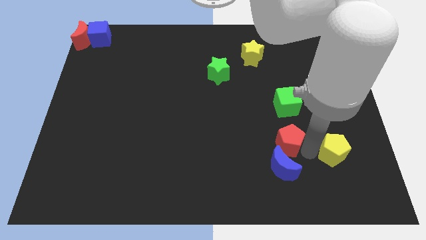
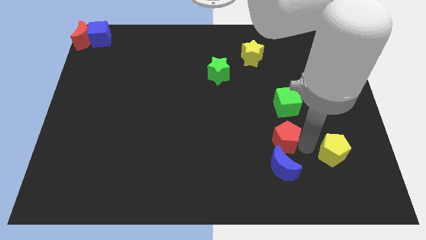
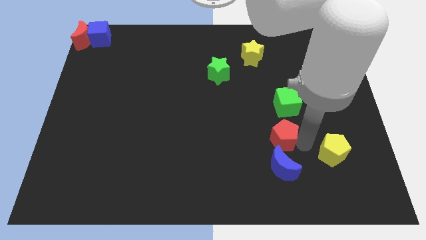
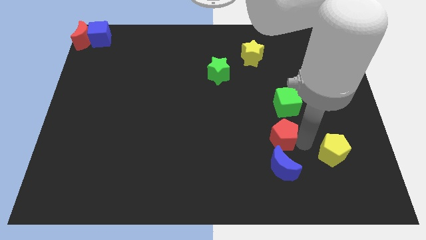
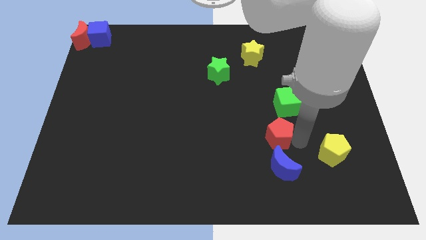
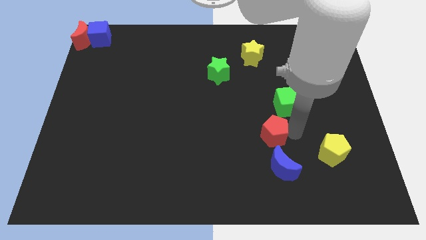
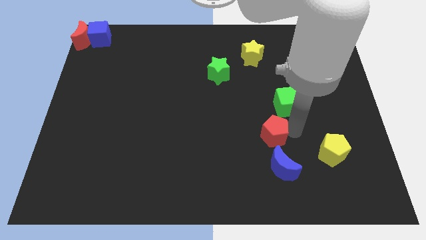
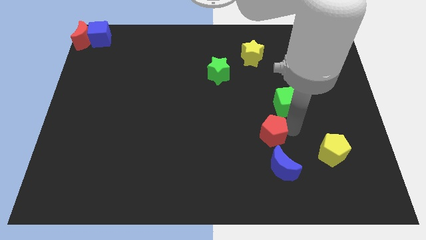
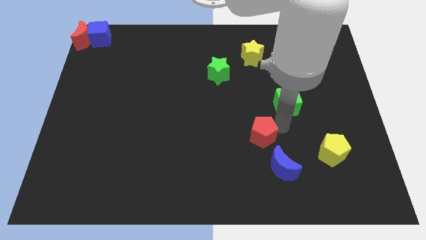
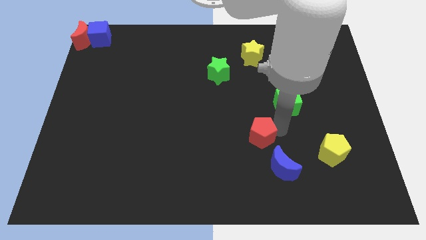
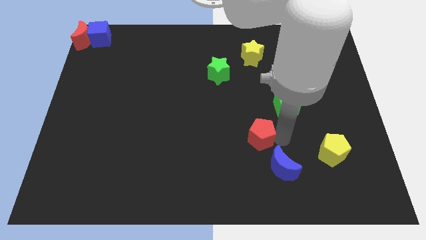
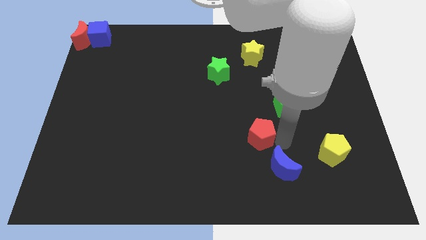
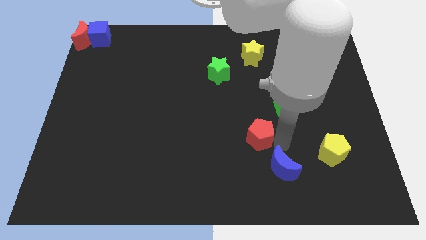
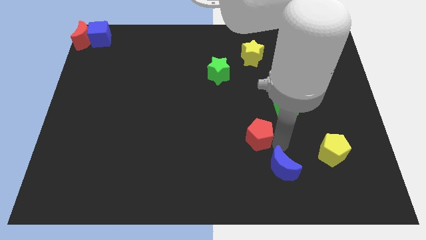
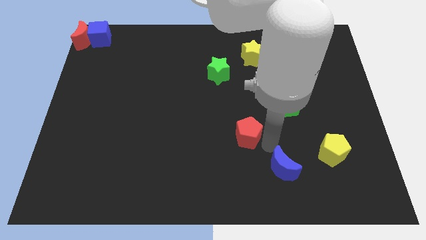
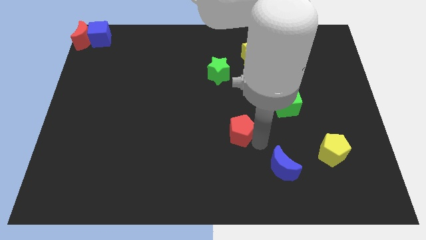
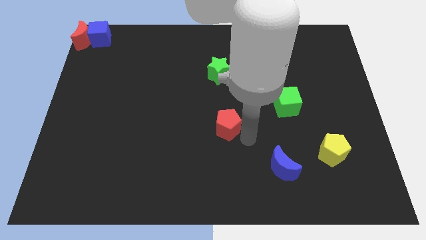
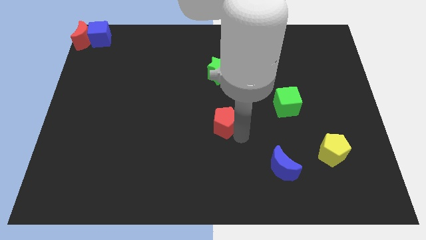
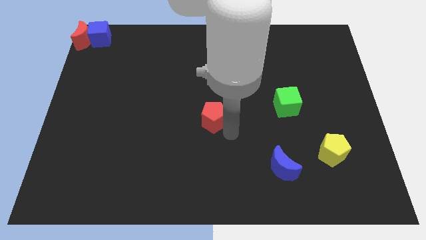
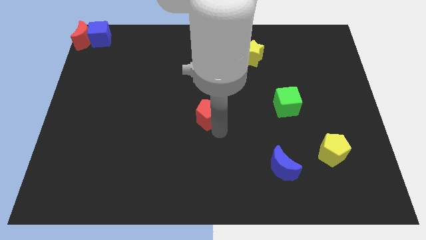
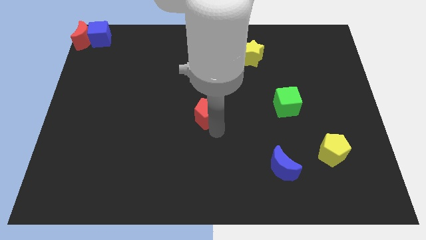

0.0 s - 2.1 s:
separate red pentagon from blue moon

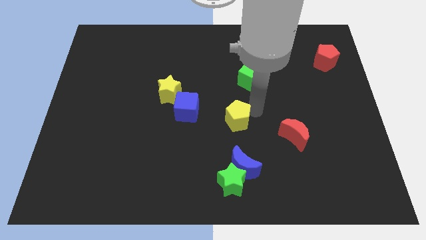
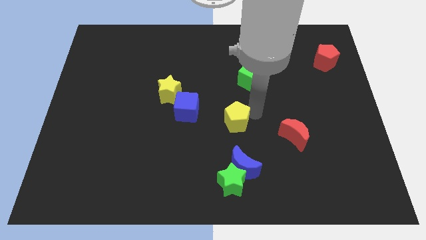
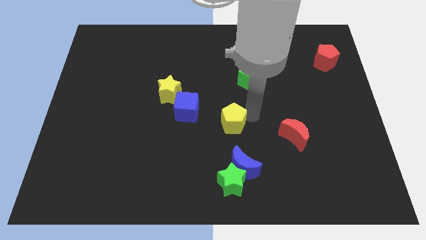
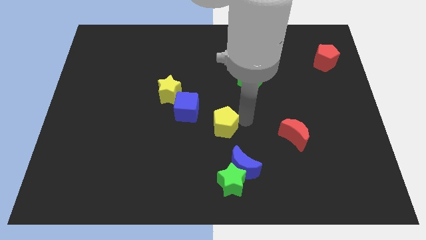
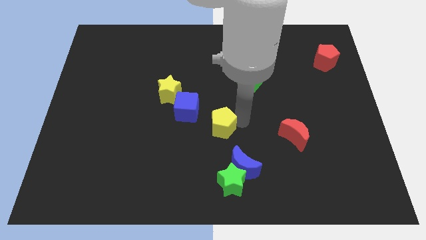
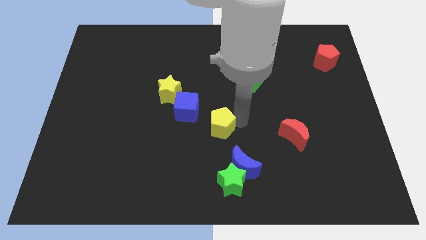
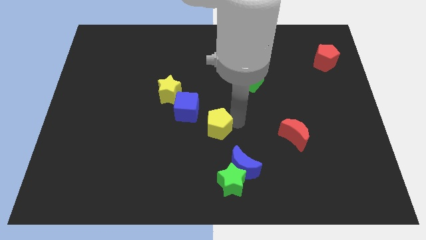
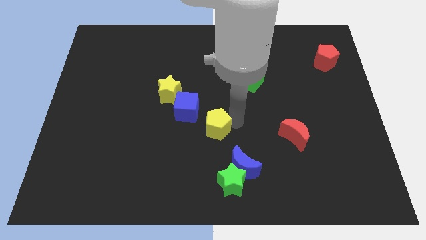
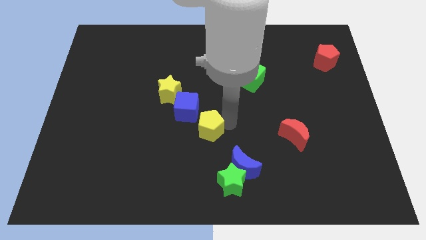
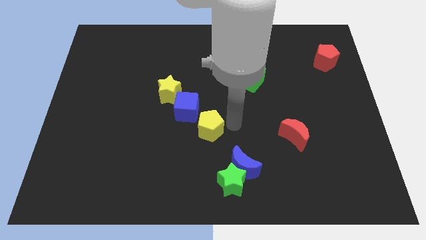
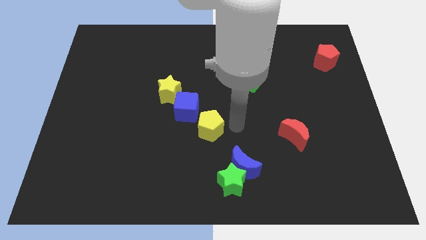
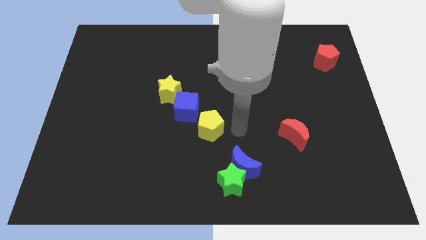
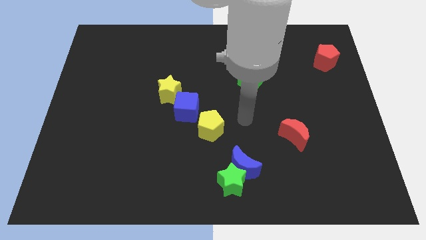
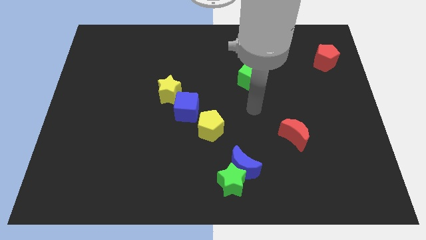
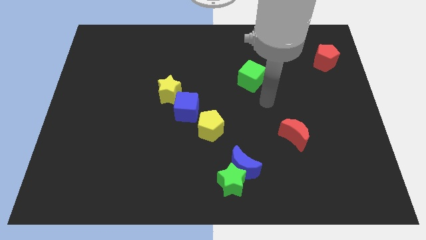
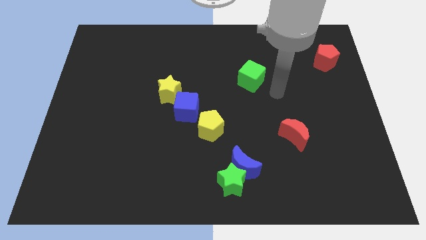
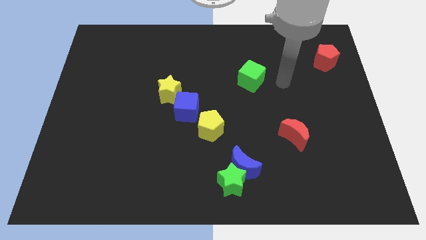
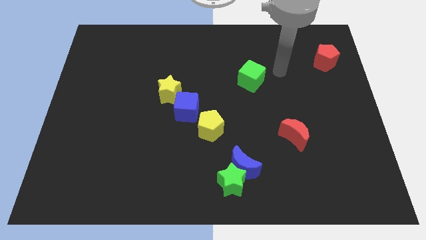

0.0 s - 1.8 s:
push the yellow pentagon slightly downwards

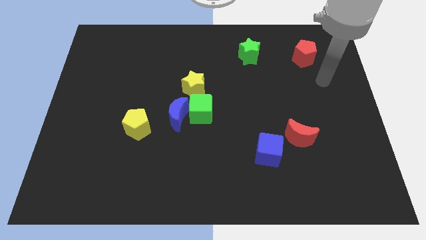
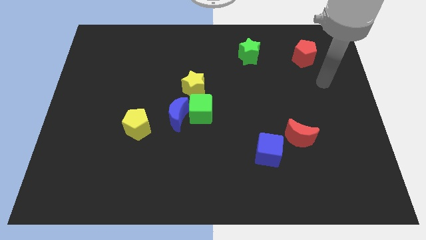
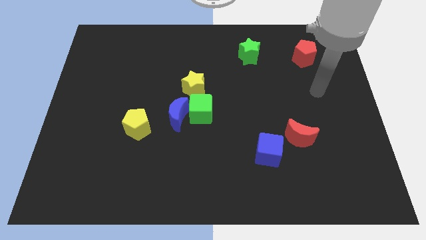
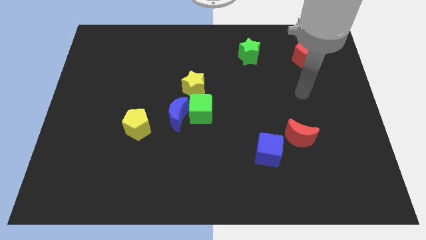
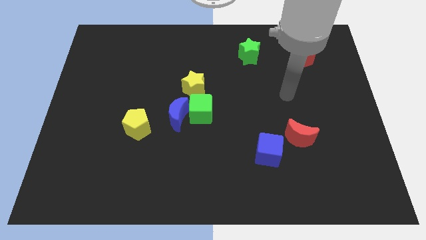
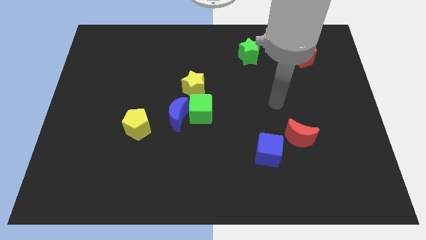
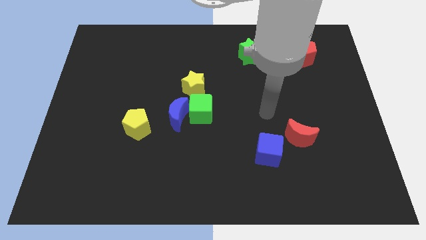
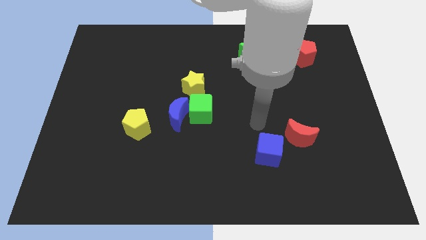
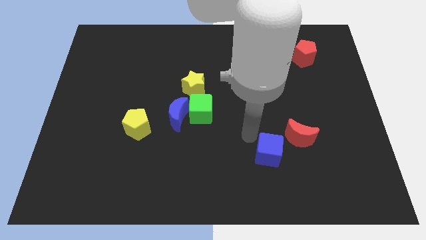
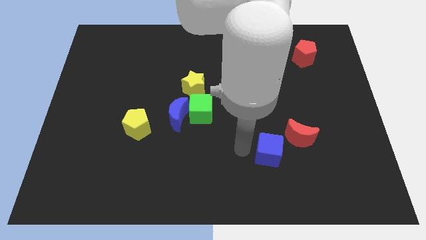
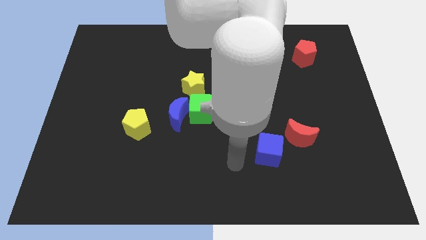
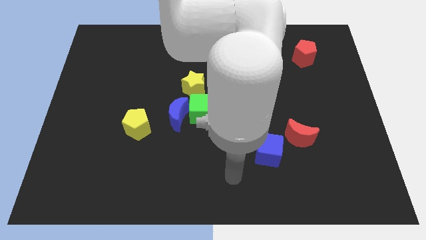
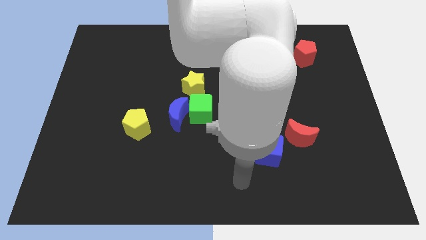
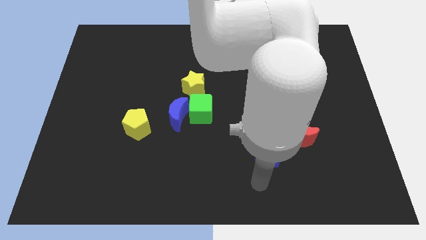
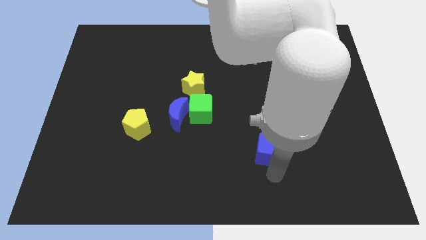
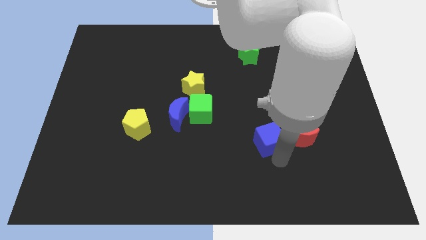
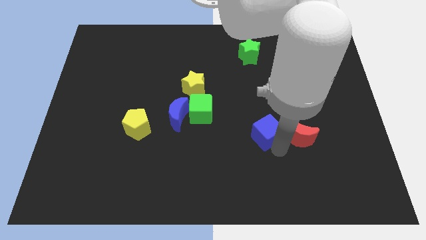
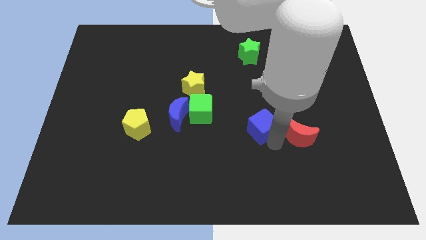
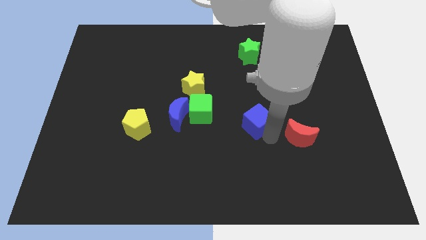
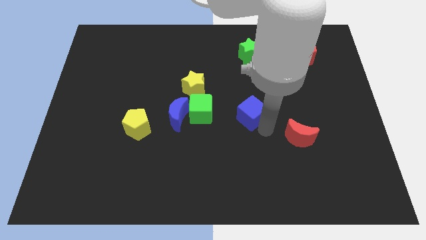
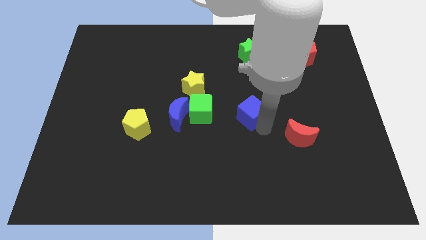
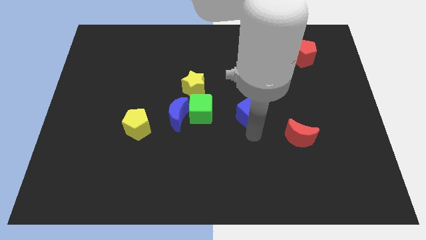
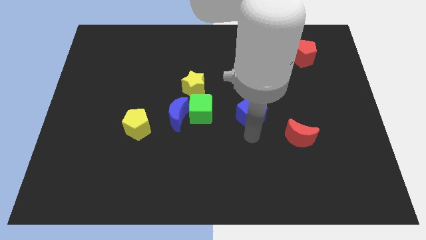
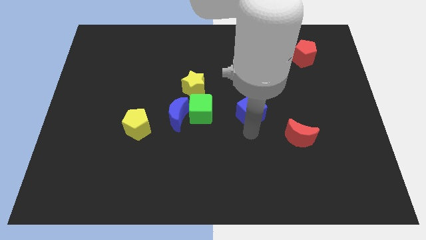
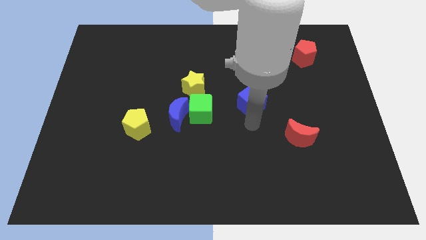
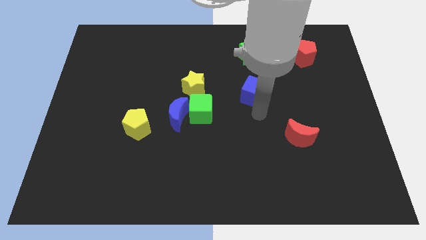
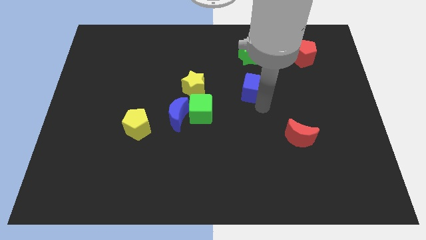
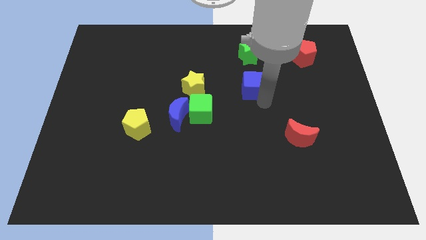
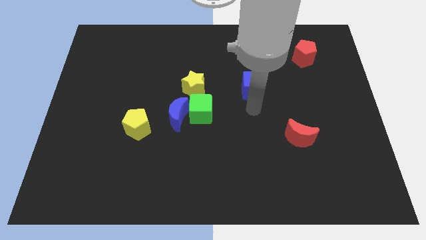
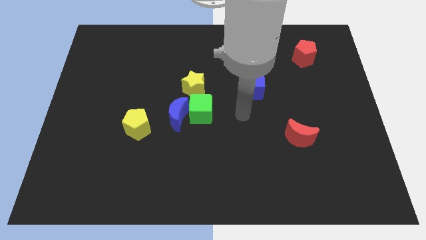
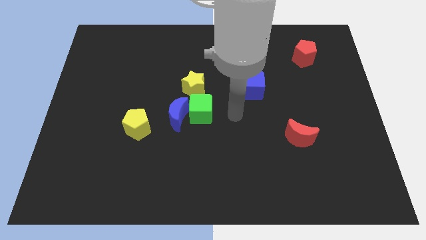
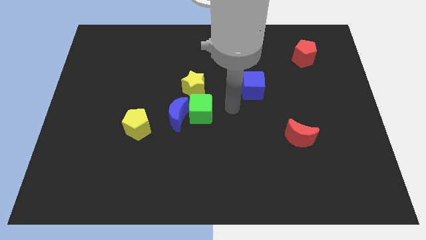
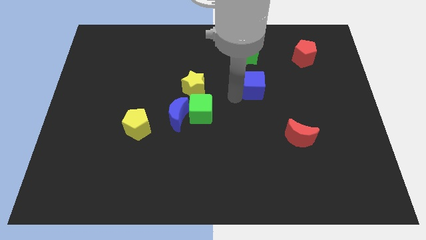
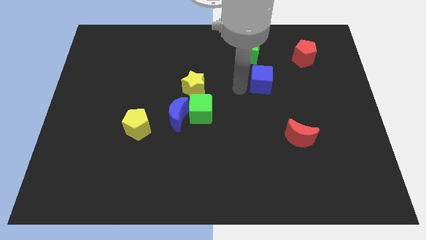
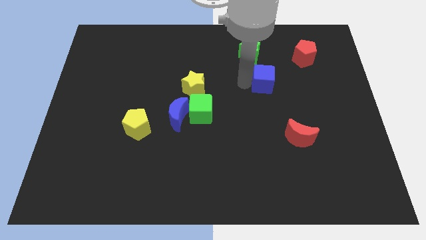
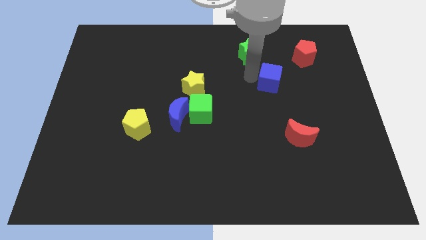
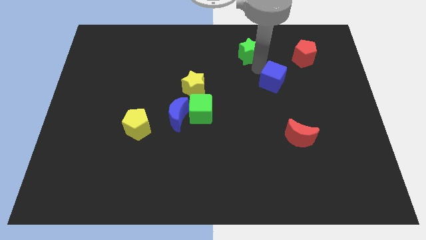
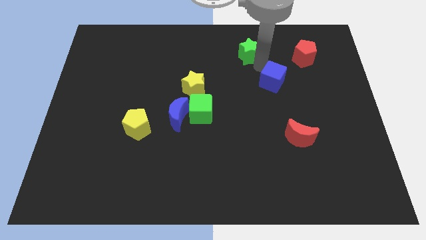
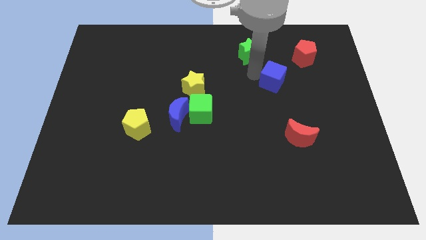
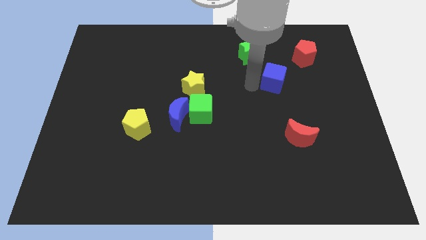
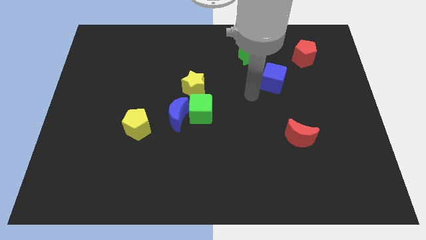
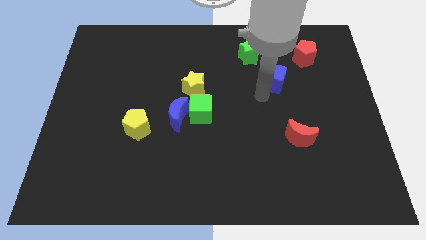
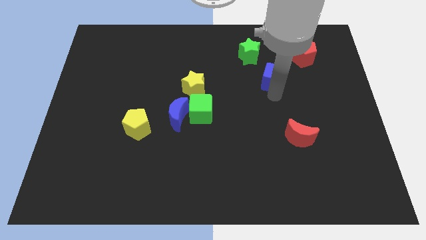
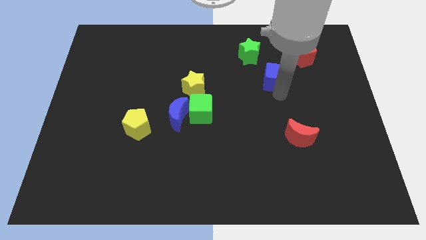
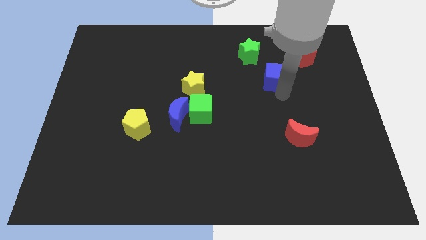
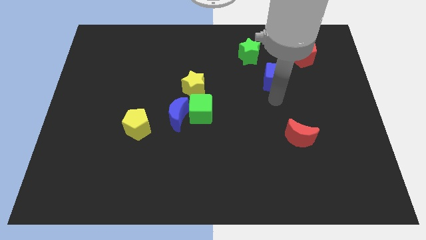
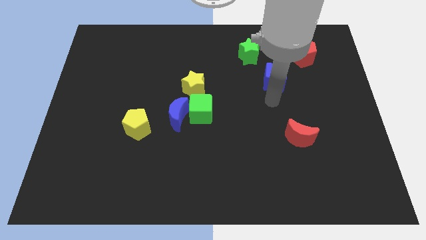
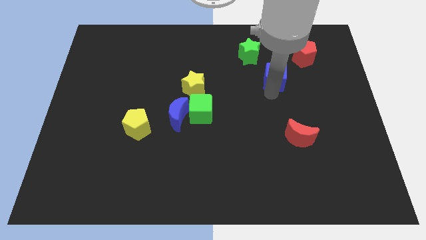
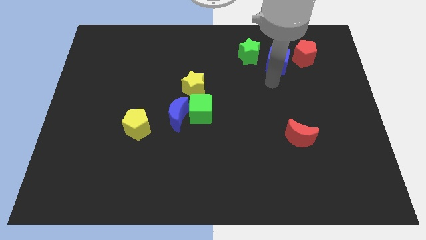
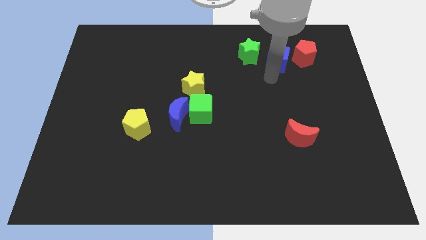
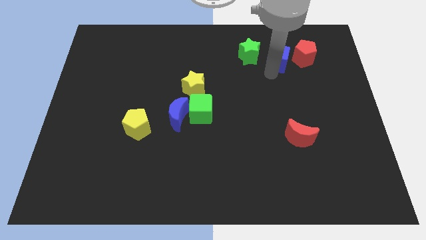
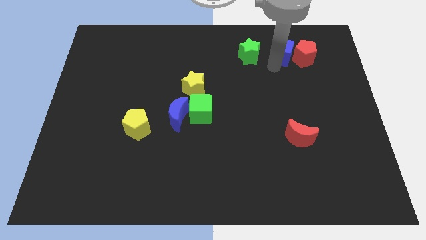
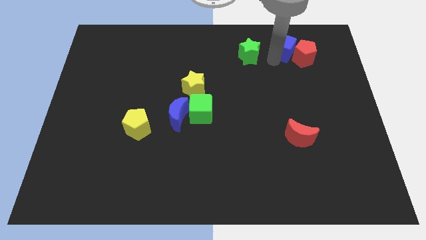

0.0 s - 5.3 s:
put the blue cube in between green star and red pentagon
